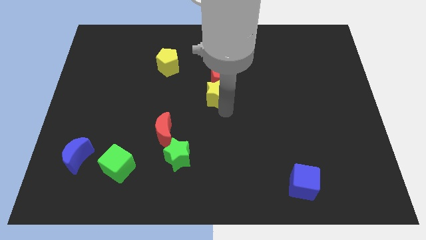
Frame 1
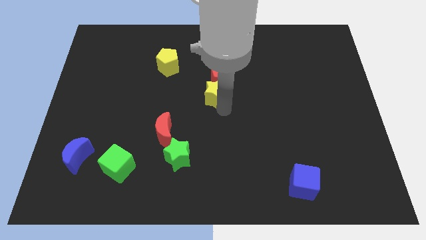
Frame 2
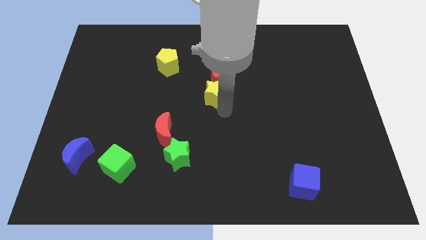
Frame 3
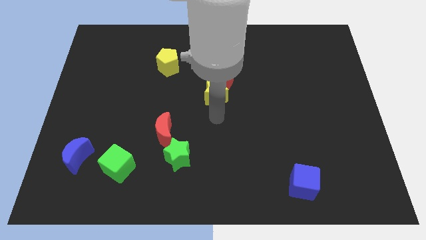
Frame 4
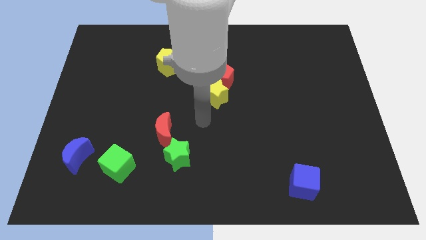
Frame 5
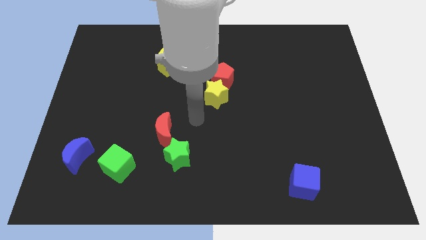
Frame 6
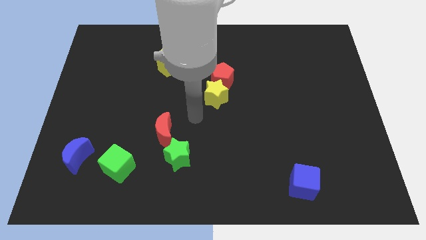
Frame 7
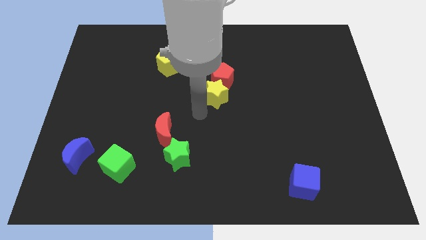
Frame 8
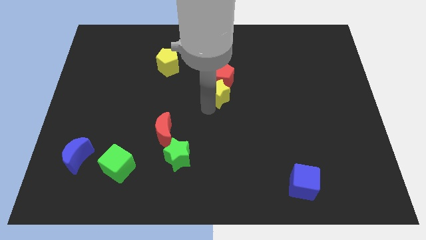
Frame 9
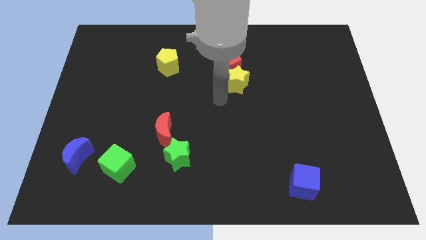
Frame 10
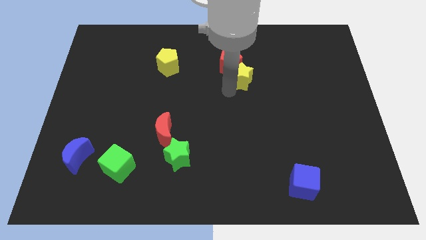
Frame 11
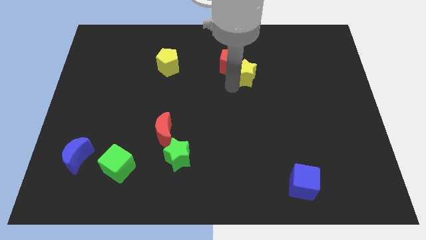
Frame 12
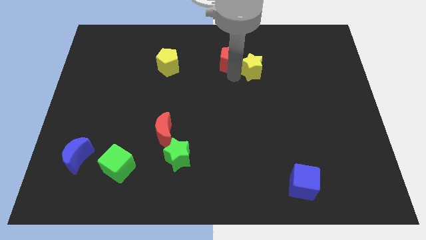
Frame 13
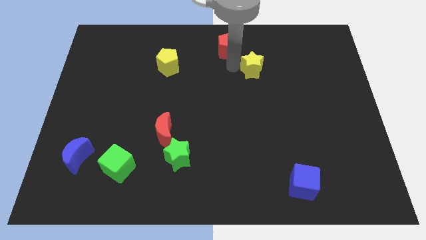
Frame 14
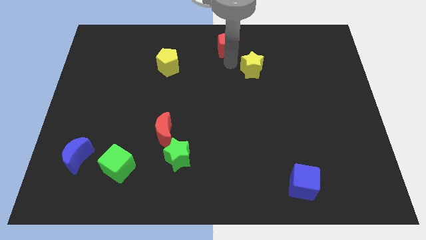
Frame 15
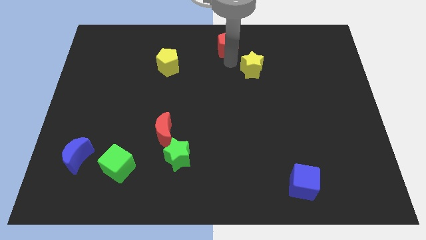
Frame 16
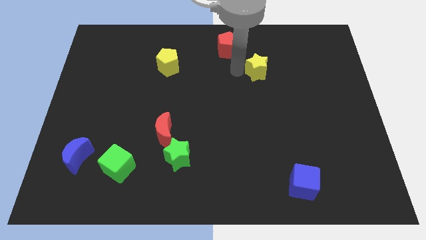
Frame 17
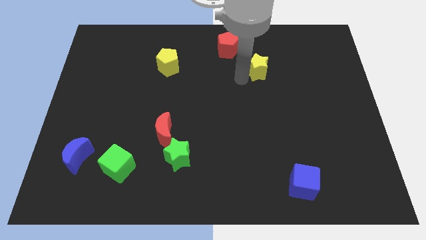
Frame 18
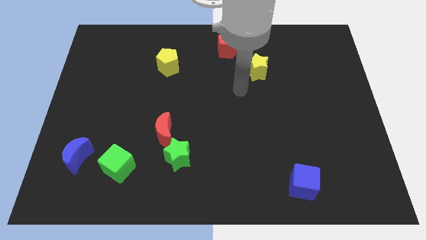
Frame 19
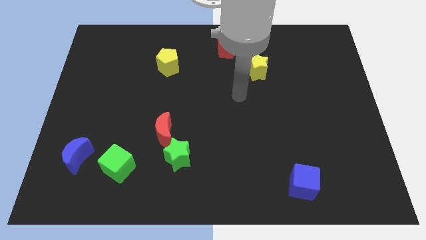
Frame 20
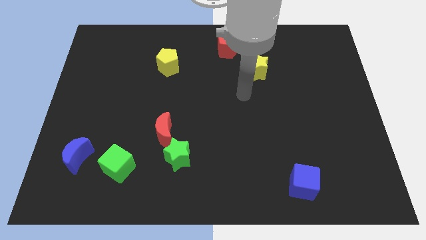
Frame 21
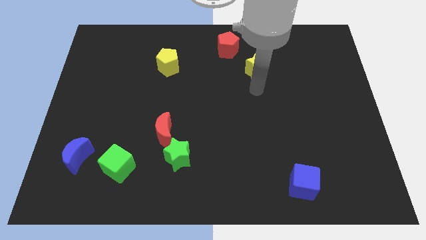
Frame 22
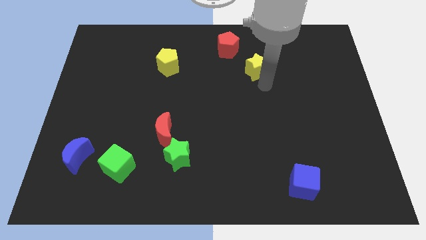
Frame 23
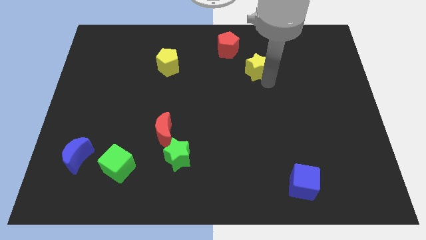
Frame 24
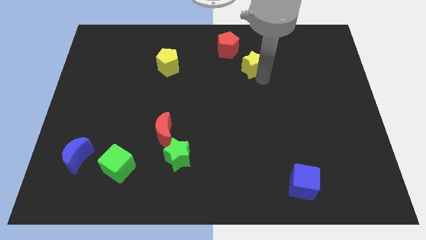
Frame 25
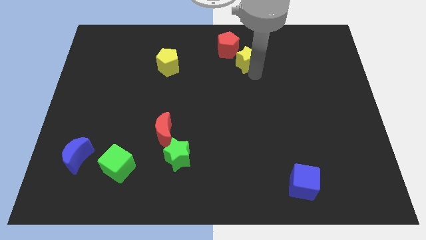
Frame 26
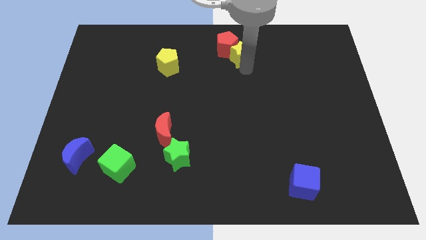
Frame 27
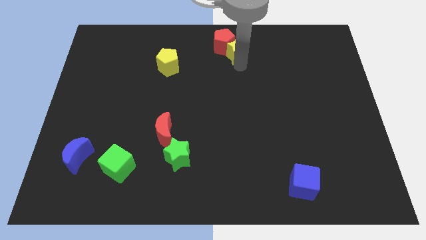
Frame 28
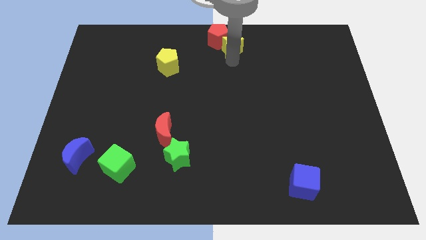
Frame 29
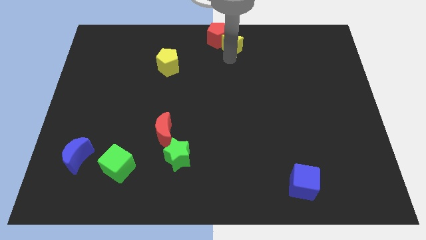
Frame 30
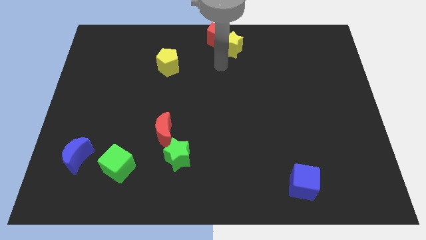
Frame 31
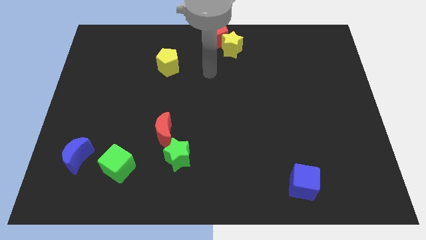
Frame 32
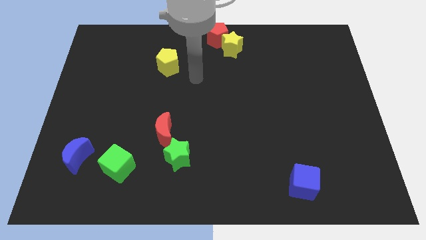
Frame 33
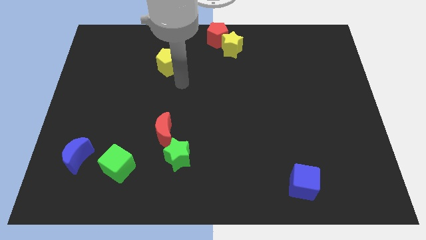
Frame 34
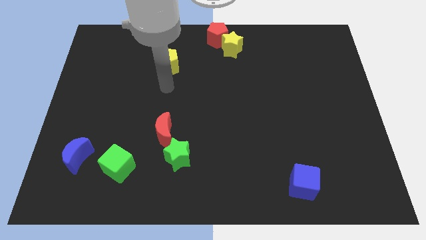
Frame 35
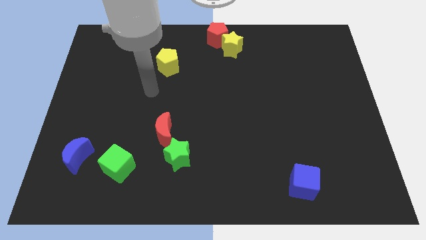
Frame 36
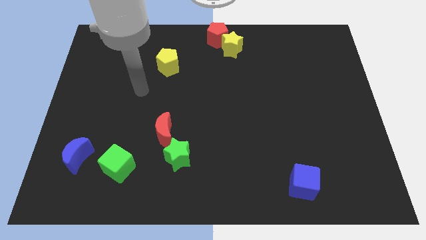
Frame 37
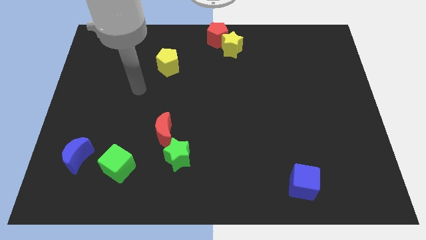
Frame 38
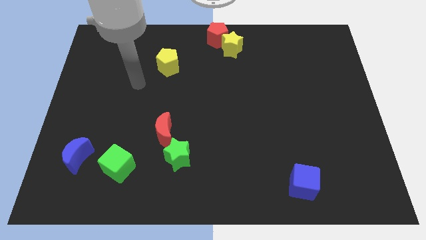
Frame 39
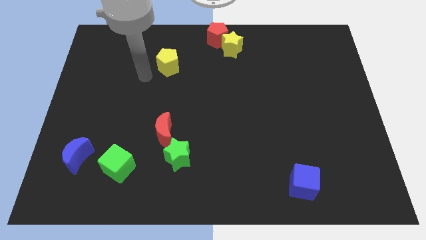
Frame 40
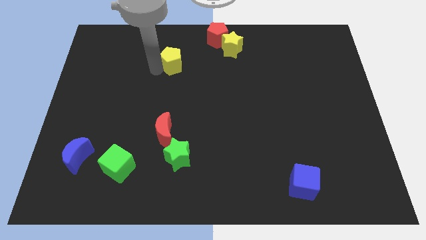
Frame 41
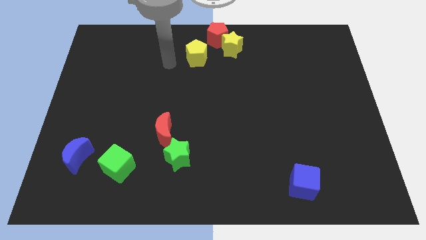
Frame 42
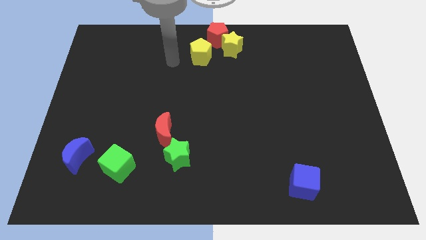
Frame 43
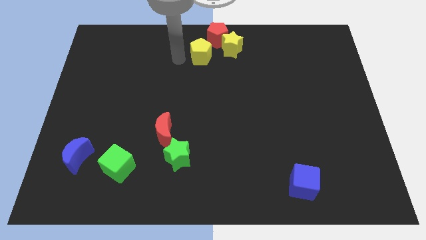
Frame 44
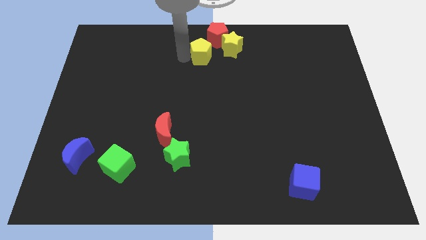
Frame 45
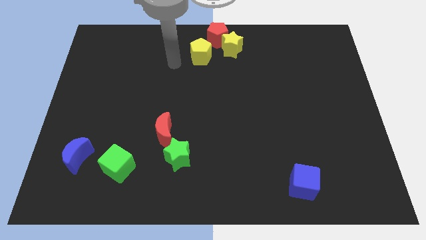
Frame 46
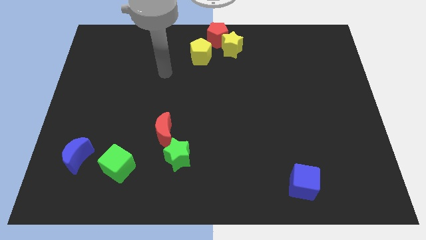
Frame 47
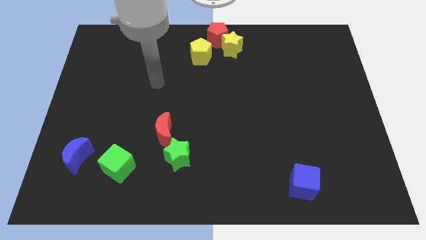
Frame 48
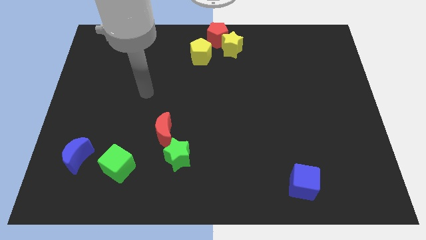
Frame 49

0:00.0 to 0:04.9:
move red pentagon and yellow blocks to top center of the board

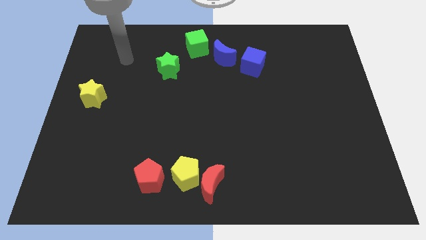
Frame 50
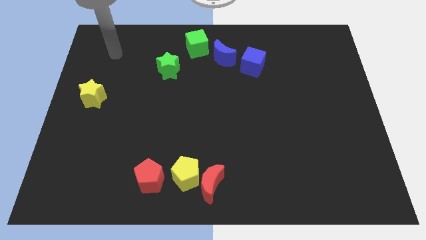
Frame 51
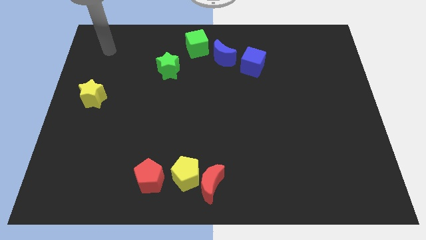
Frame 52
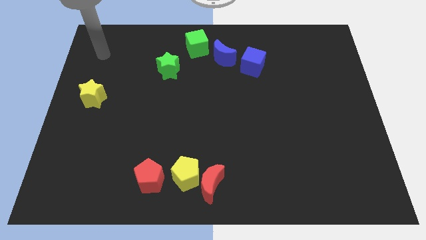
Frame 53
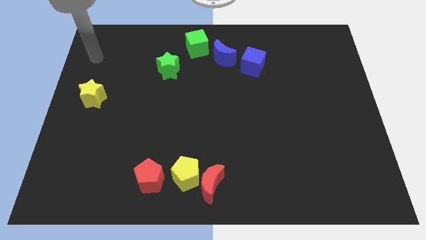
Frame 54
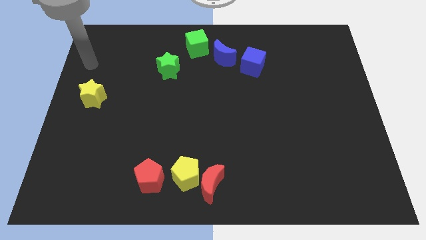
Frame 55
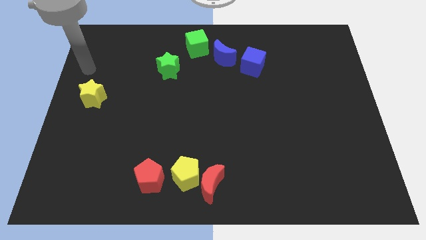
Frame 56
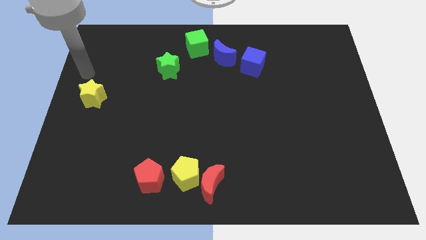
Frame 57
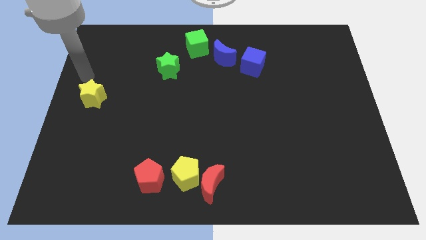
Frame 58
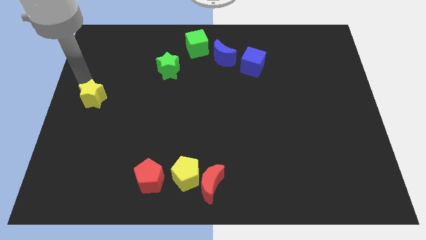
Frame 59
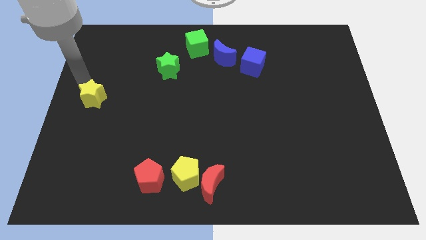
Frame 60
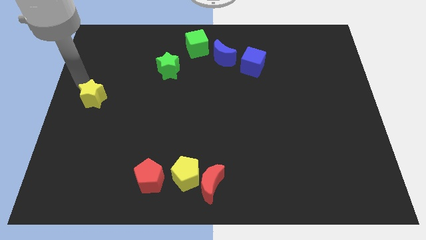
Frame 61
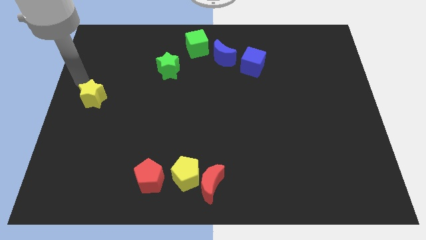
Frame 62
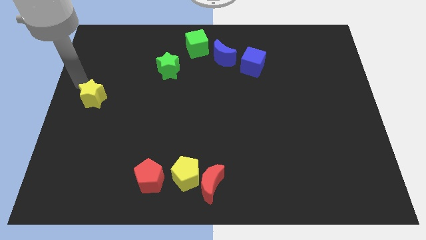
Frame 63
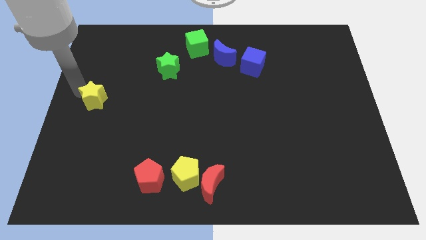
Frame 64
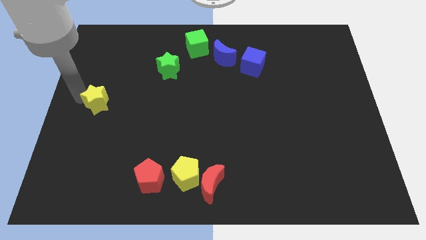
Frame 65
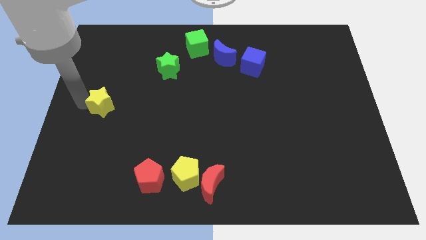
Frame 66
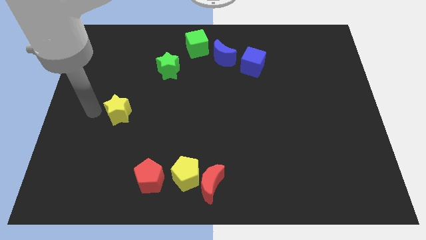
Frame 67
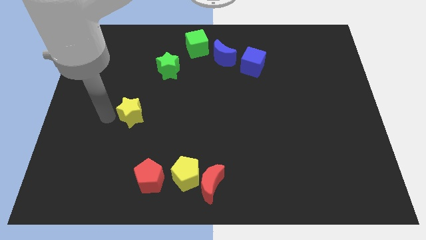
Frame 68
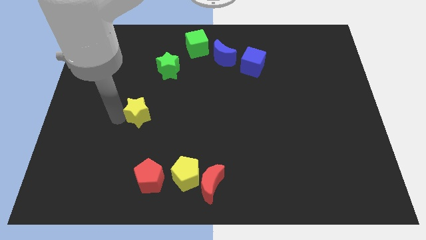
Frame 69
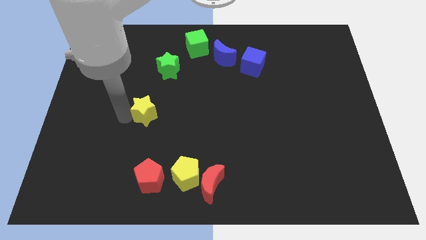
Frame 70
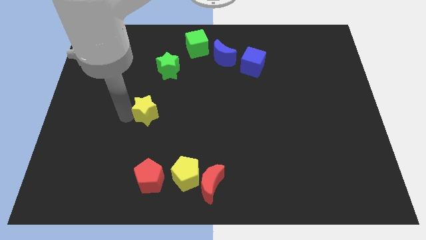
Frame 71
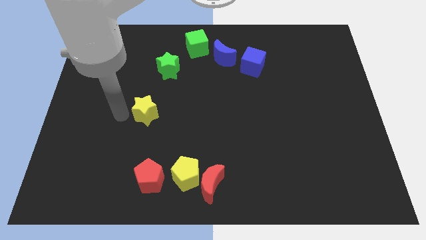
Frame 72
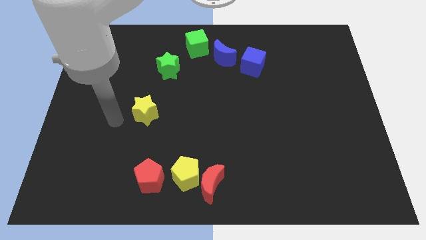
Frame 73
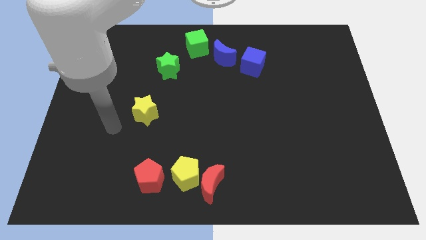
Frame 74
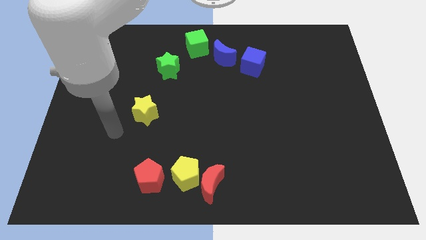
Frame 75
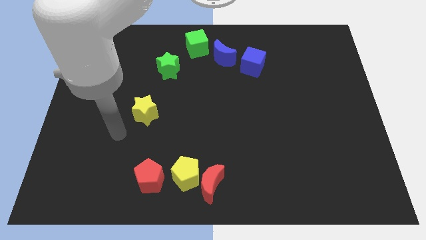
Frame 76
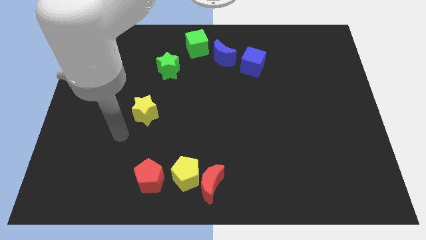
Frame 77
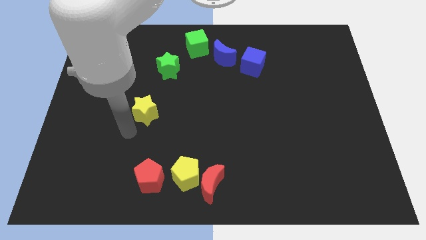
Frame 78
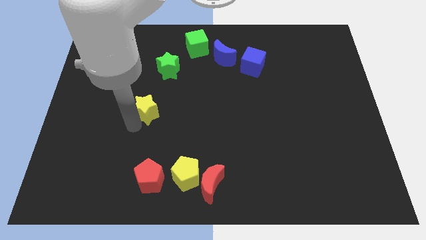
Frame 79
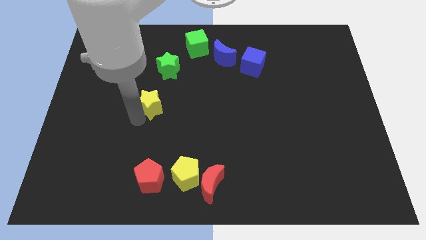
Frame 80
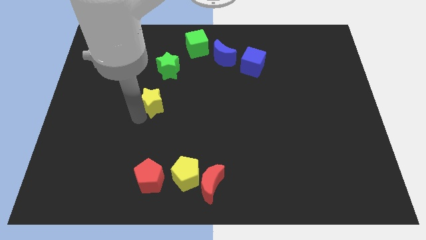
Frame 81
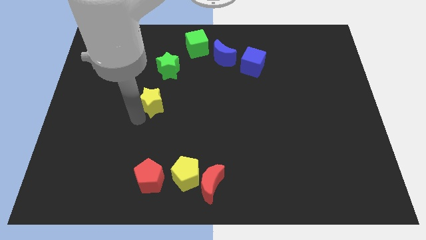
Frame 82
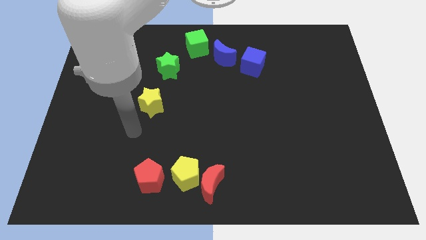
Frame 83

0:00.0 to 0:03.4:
move the yellow star slightly towards the bottom left of the green star

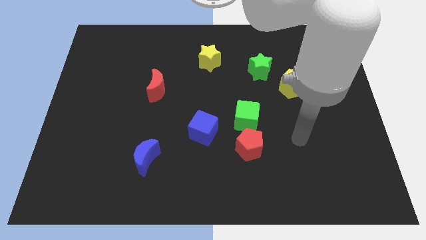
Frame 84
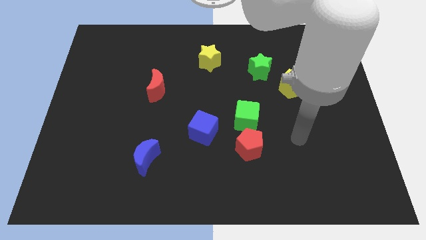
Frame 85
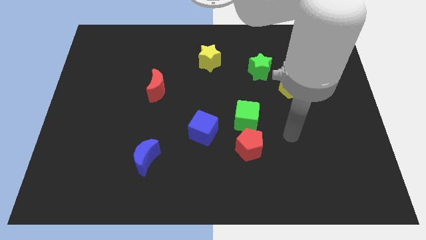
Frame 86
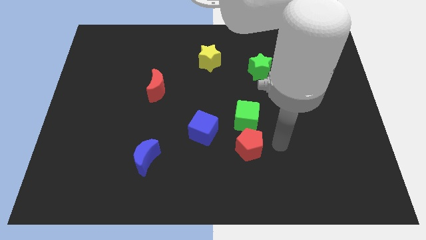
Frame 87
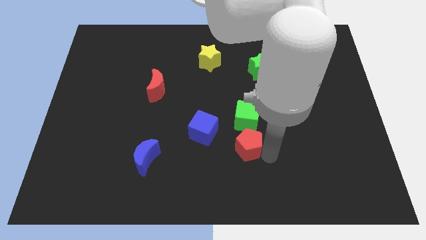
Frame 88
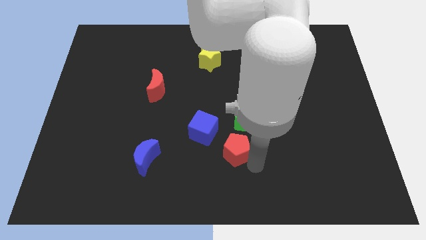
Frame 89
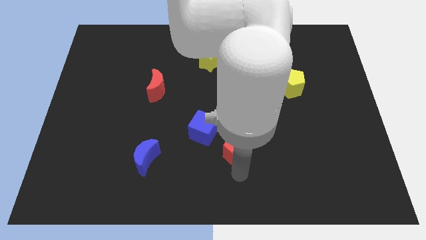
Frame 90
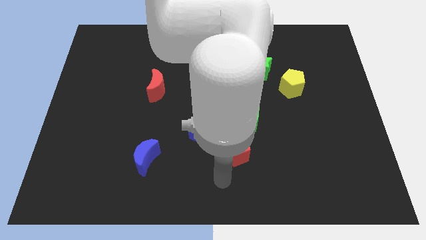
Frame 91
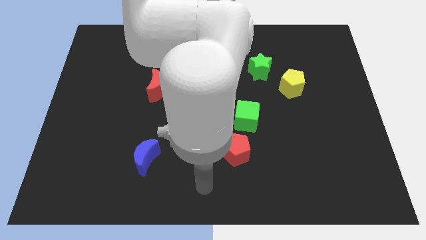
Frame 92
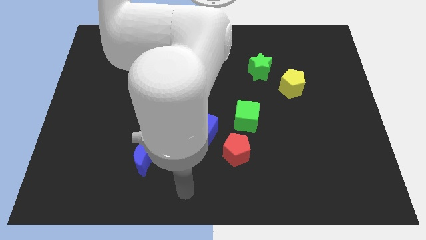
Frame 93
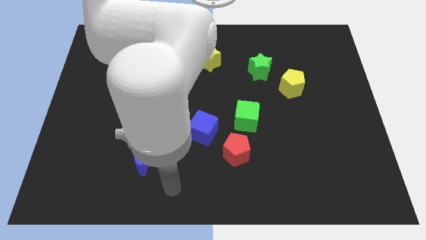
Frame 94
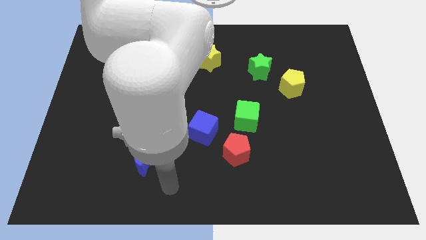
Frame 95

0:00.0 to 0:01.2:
touch the red pentagon
